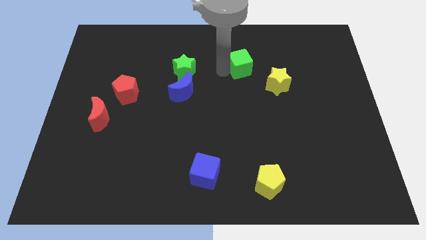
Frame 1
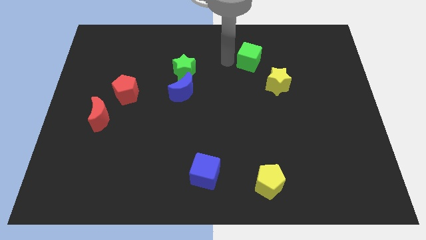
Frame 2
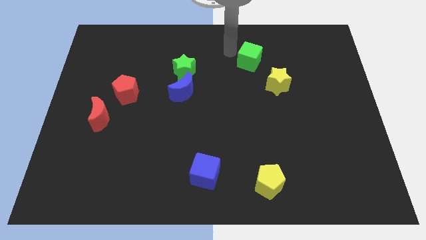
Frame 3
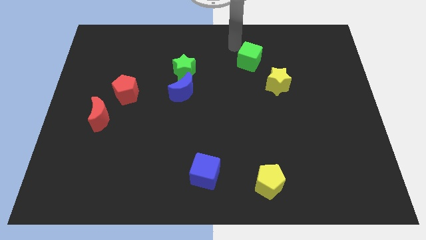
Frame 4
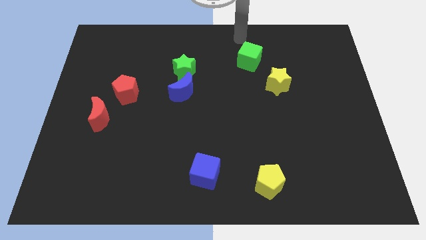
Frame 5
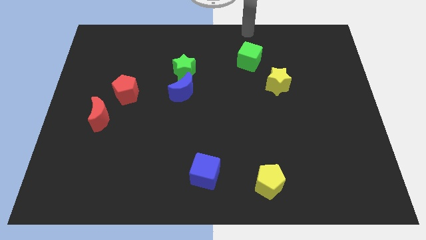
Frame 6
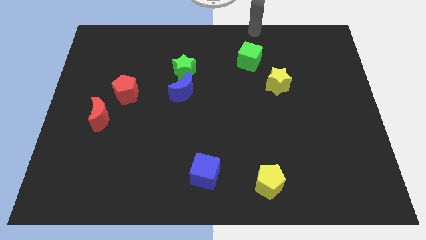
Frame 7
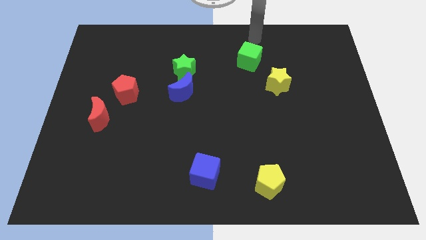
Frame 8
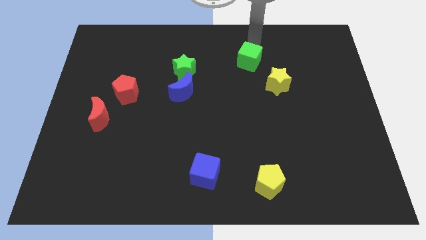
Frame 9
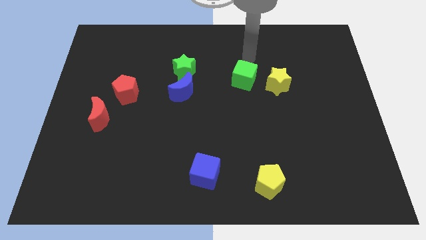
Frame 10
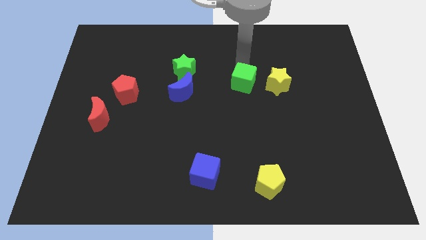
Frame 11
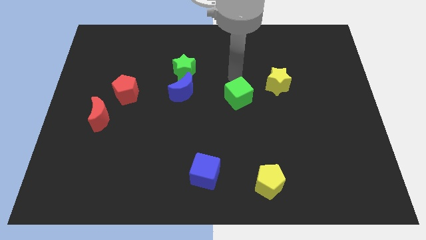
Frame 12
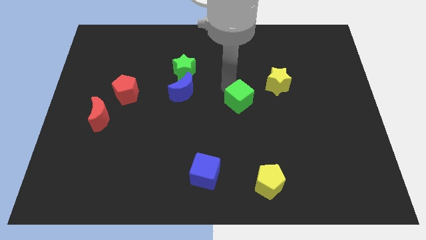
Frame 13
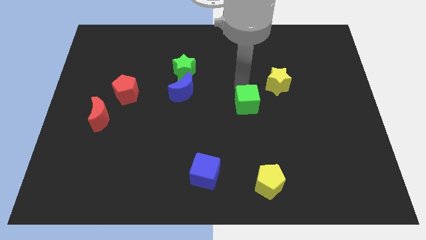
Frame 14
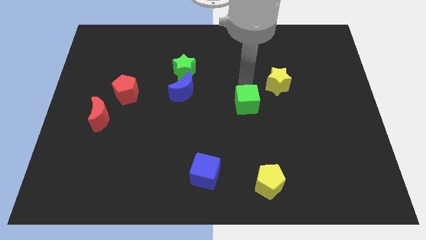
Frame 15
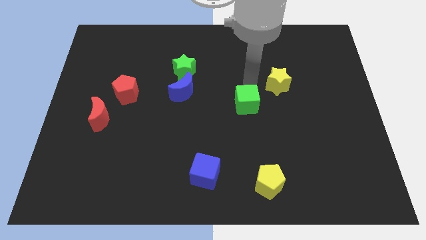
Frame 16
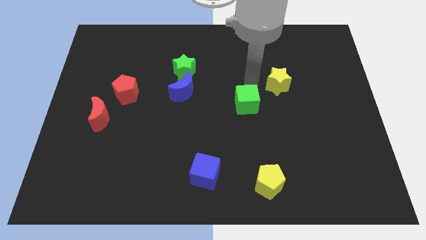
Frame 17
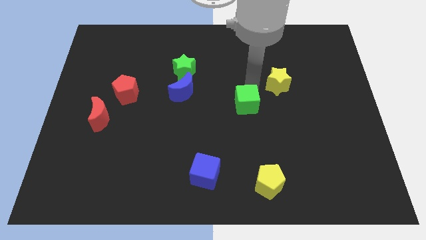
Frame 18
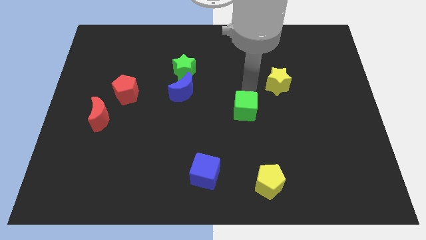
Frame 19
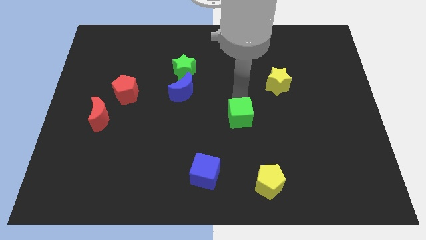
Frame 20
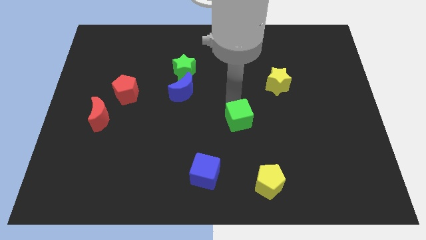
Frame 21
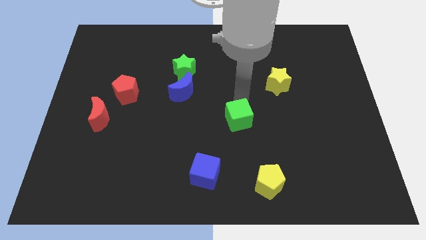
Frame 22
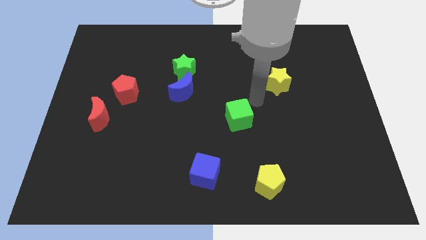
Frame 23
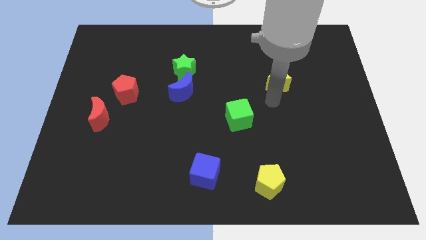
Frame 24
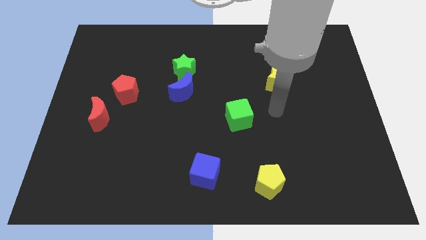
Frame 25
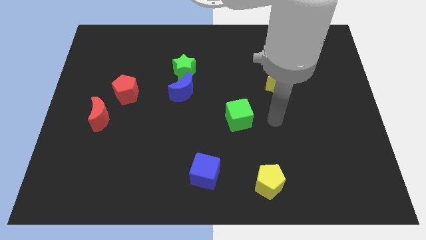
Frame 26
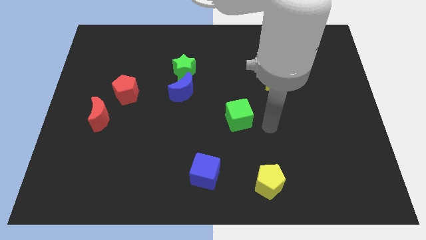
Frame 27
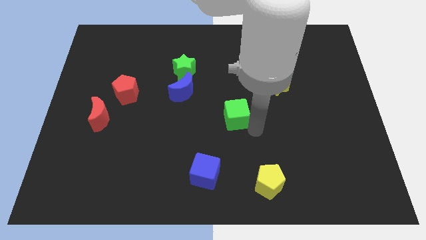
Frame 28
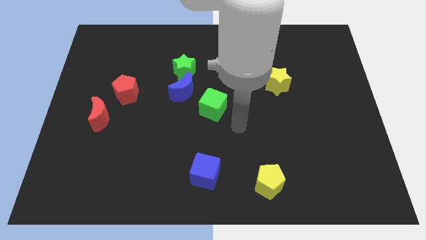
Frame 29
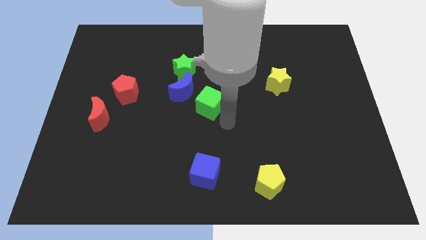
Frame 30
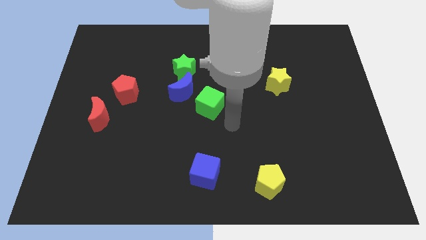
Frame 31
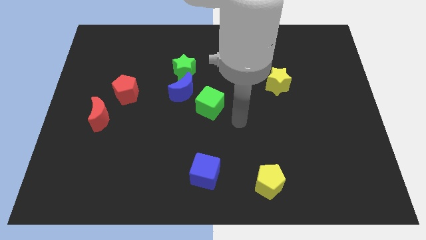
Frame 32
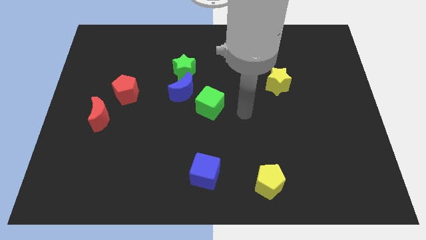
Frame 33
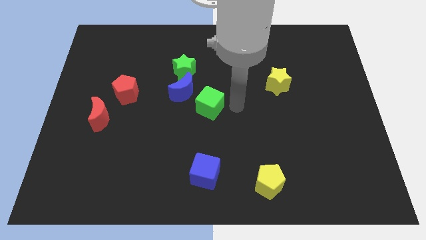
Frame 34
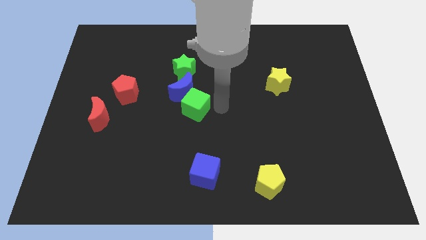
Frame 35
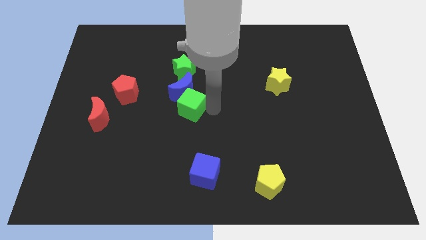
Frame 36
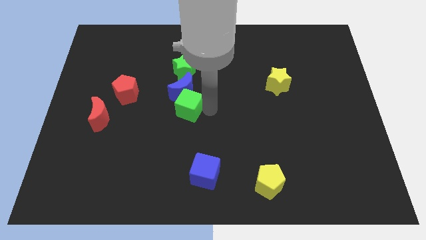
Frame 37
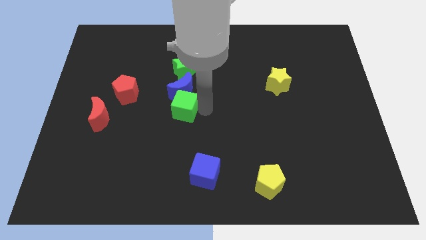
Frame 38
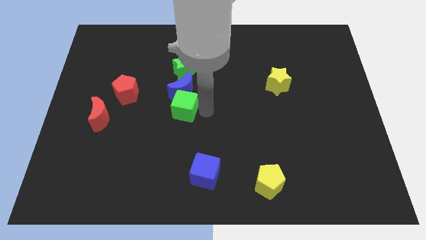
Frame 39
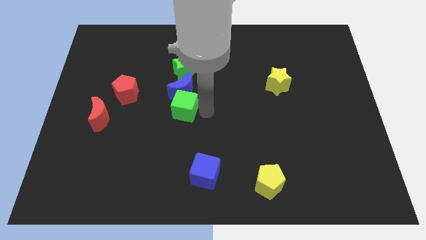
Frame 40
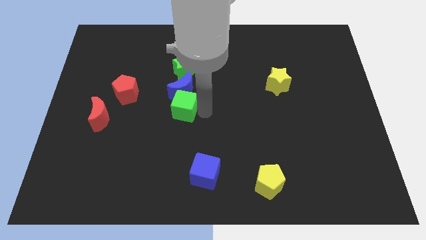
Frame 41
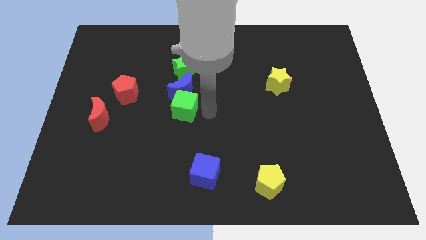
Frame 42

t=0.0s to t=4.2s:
move the green cube into the blue crescent

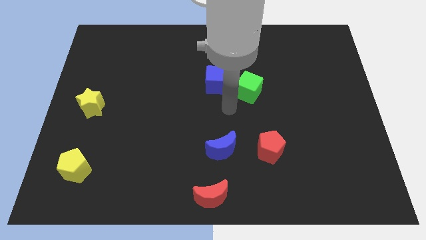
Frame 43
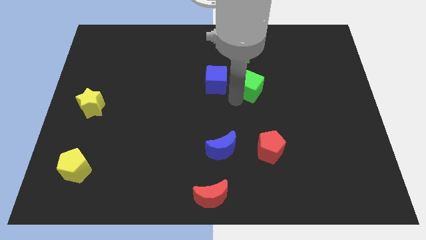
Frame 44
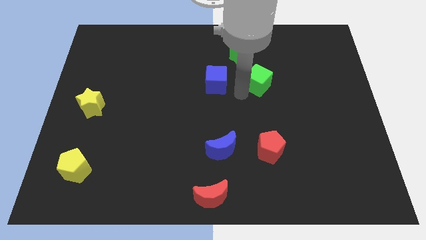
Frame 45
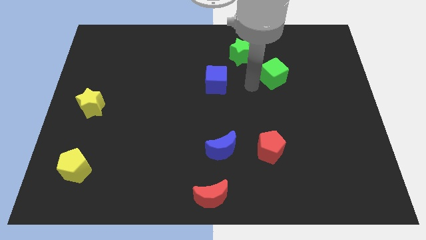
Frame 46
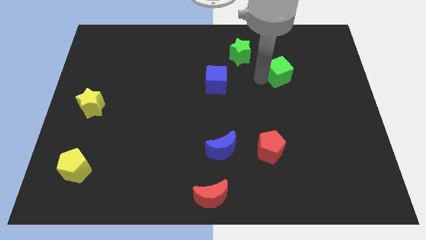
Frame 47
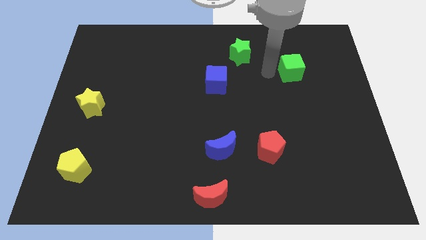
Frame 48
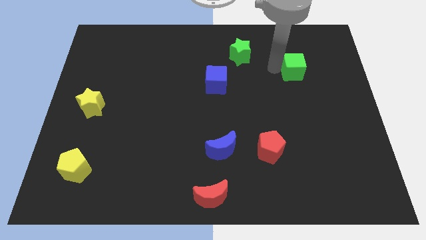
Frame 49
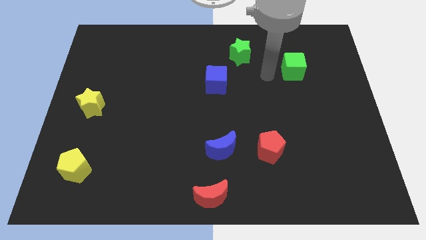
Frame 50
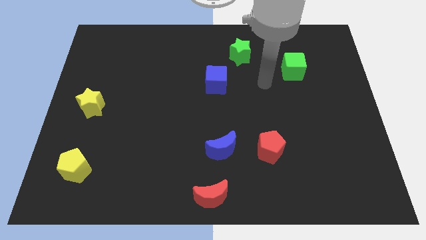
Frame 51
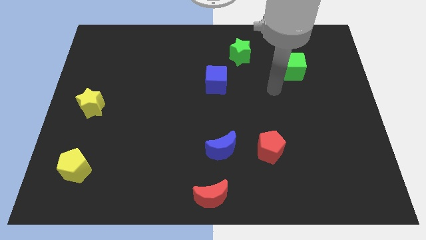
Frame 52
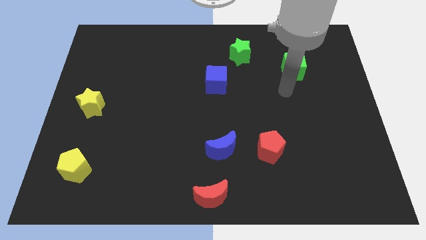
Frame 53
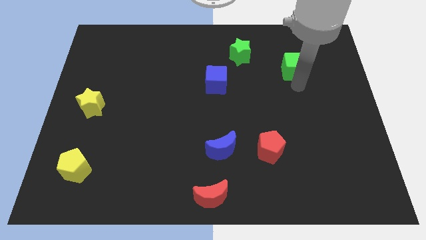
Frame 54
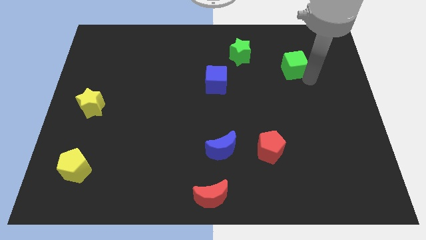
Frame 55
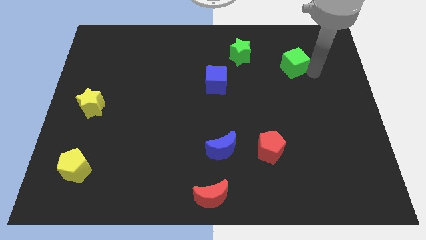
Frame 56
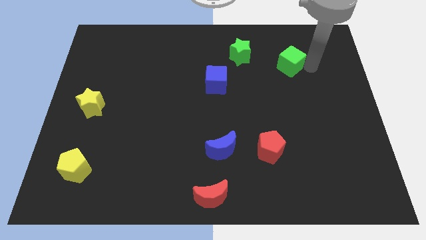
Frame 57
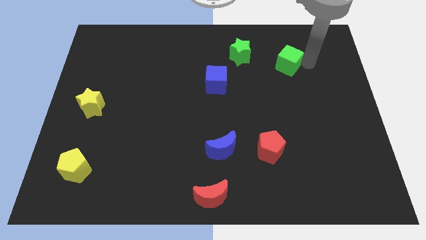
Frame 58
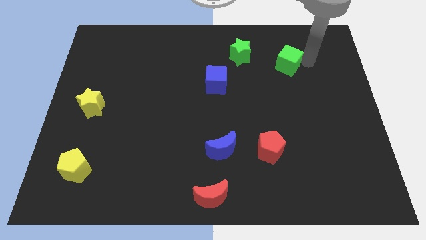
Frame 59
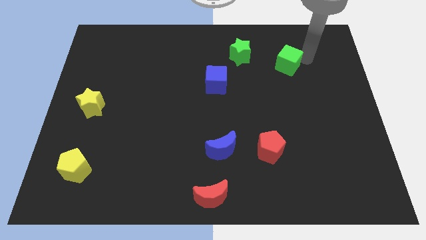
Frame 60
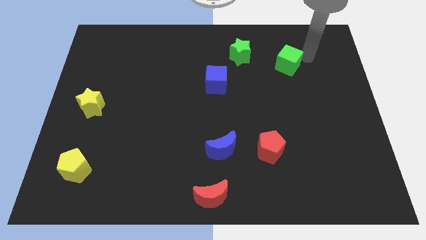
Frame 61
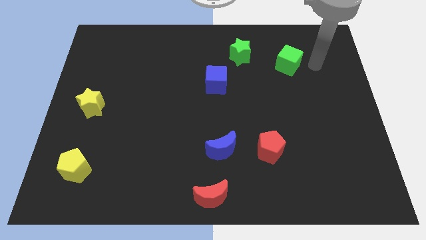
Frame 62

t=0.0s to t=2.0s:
push the green cube towards the right of green star

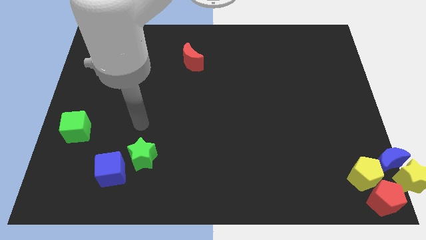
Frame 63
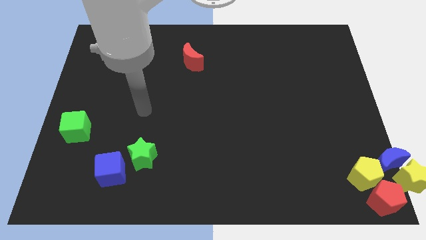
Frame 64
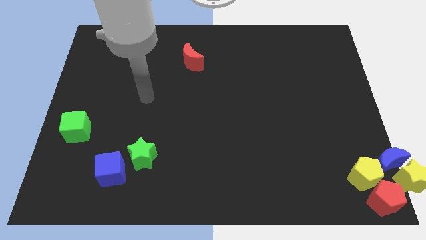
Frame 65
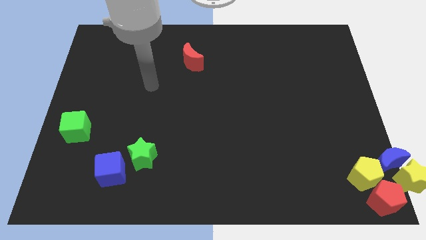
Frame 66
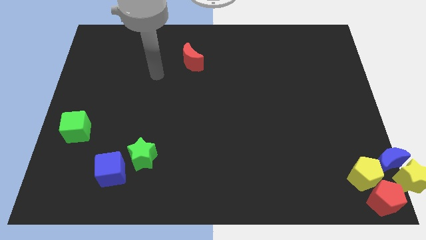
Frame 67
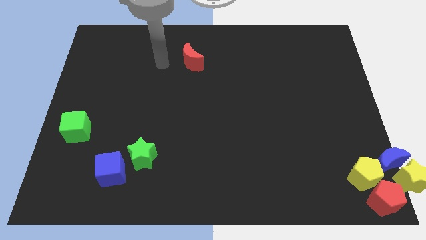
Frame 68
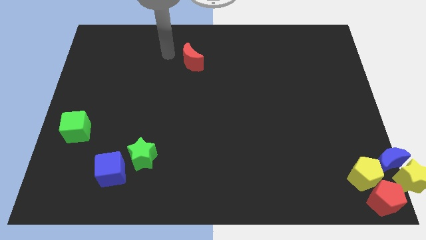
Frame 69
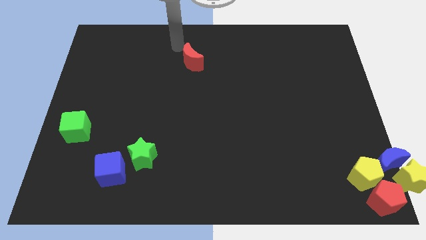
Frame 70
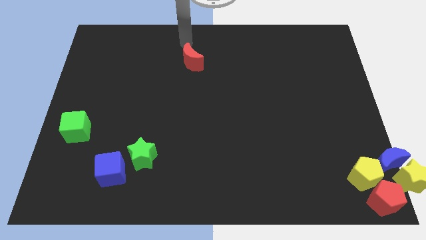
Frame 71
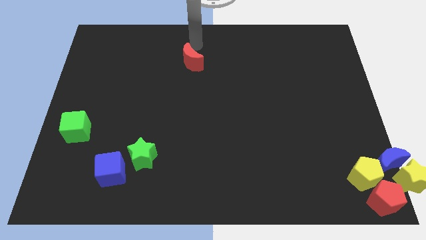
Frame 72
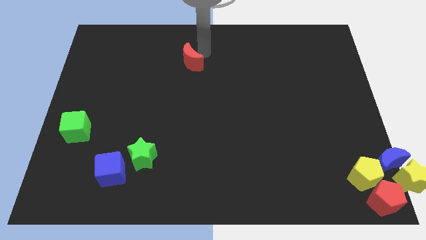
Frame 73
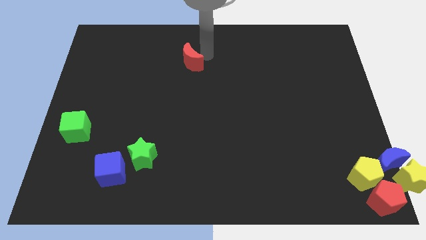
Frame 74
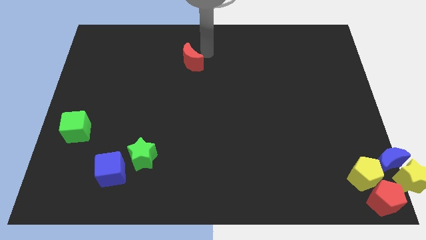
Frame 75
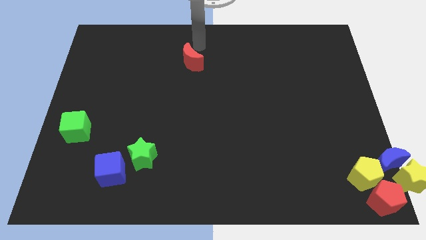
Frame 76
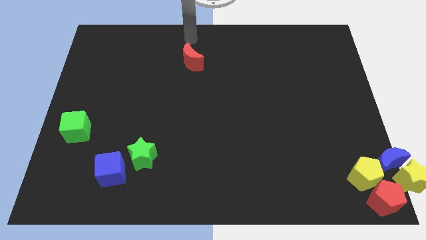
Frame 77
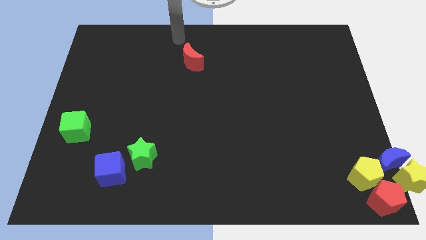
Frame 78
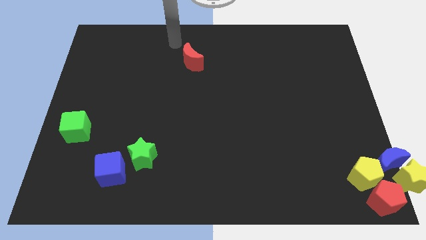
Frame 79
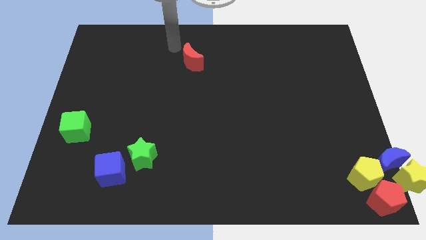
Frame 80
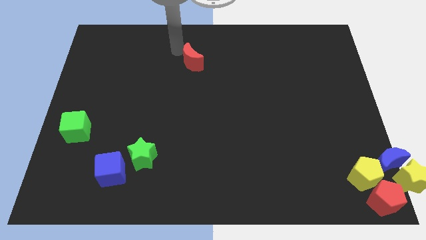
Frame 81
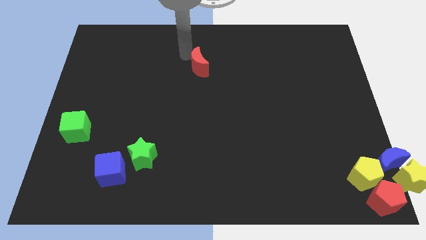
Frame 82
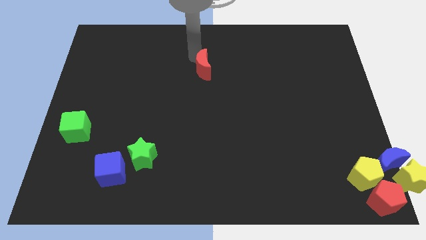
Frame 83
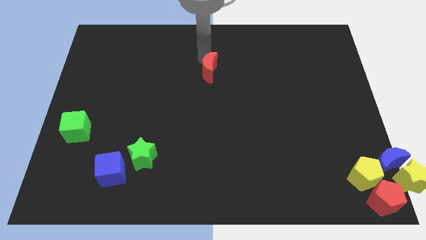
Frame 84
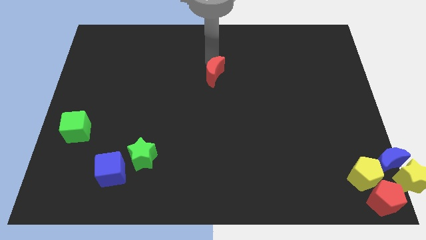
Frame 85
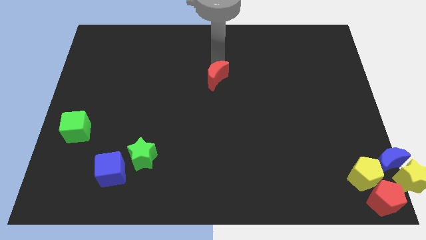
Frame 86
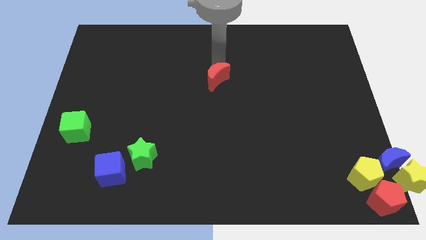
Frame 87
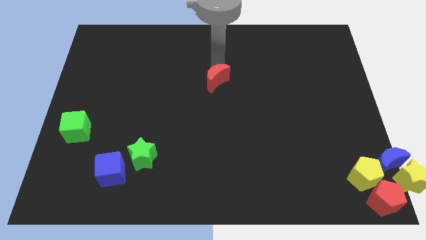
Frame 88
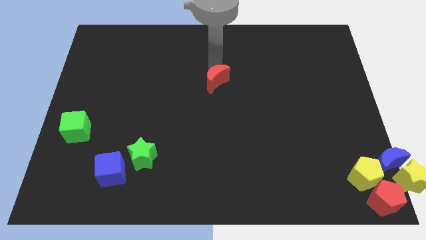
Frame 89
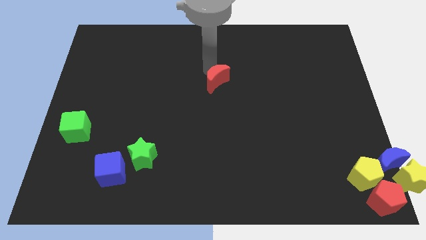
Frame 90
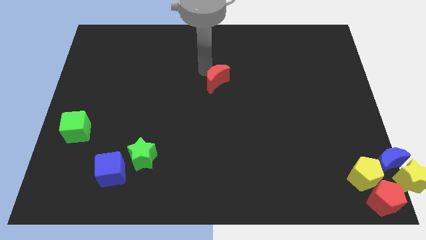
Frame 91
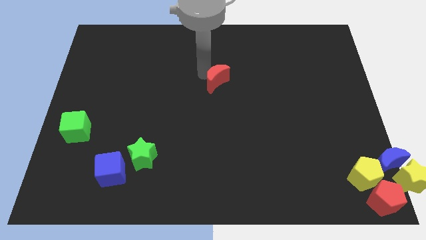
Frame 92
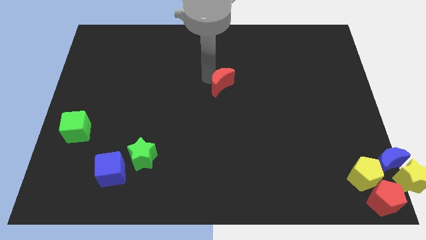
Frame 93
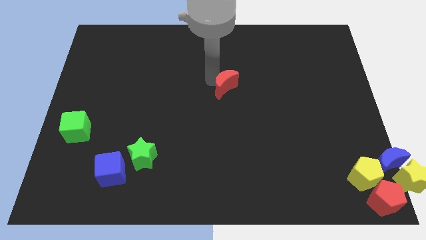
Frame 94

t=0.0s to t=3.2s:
drag the red moon towards the center
